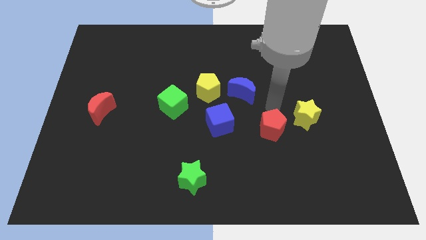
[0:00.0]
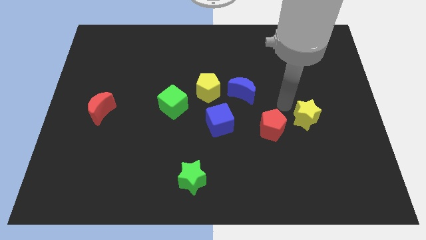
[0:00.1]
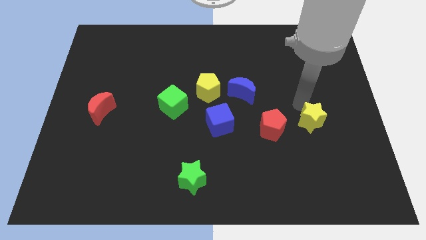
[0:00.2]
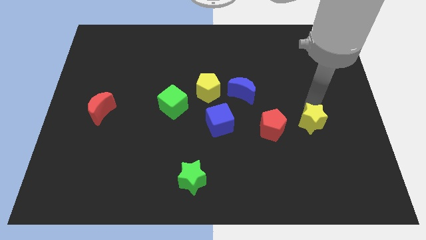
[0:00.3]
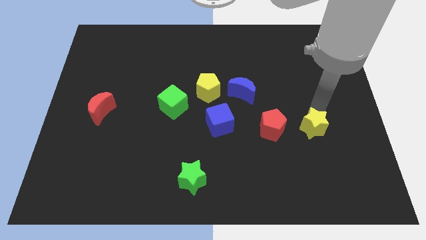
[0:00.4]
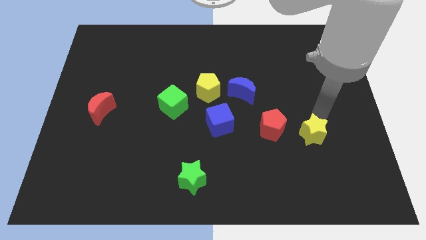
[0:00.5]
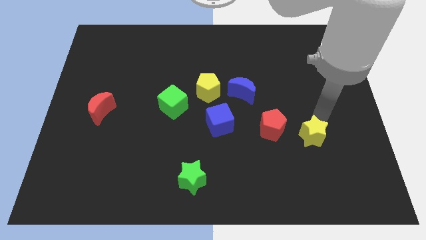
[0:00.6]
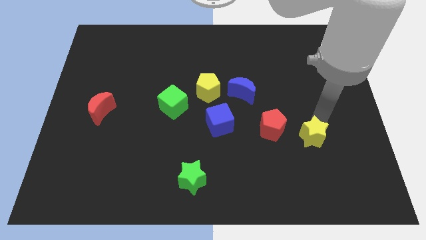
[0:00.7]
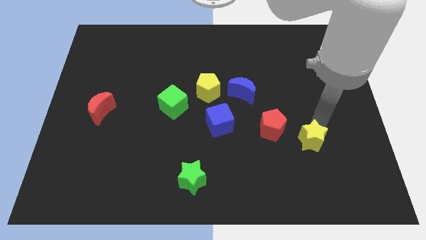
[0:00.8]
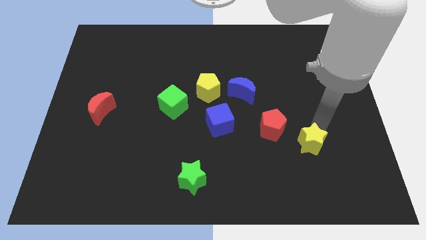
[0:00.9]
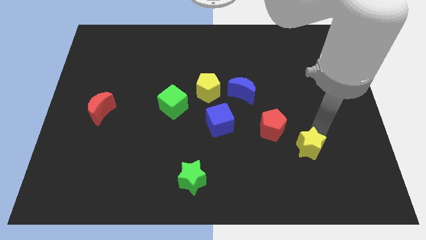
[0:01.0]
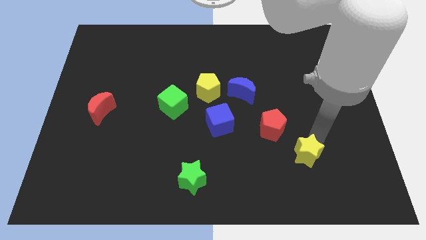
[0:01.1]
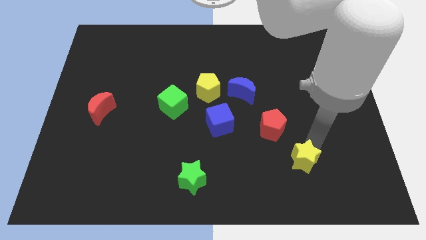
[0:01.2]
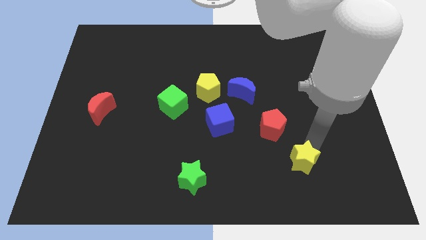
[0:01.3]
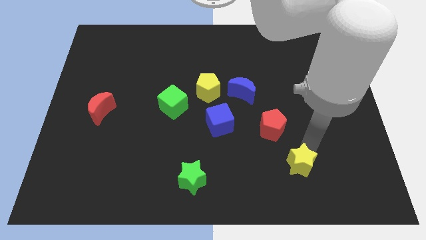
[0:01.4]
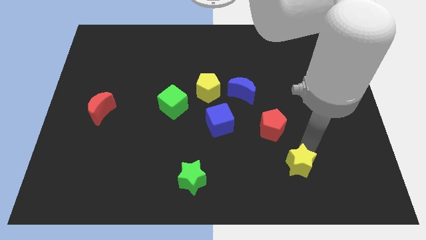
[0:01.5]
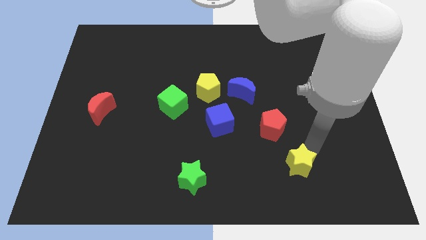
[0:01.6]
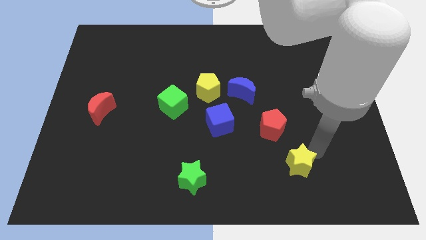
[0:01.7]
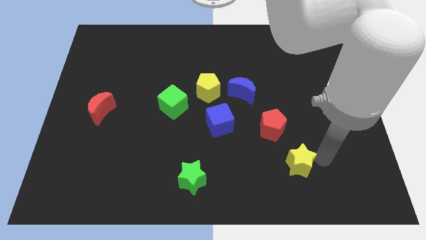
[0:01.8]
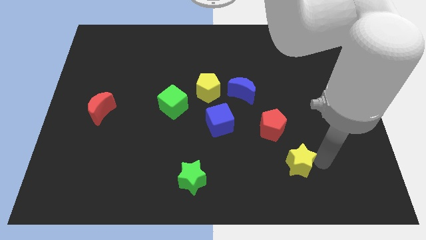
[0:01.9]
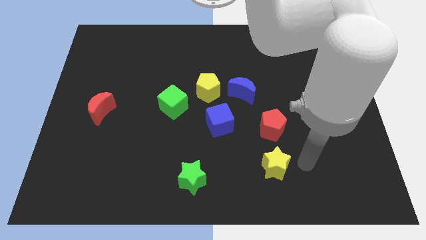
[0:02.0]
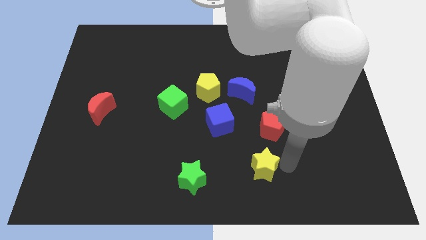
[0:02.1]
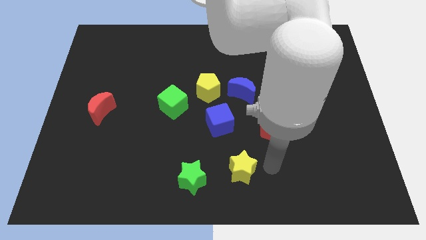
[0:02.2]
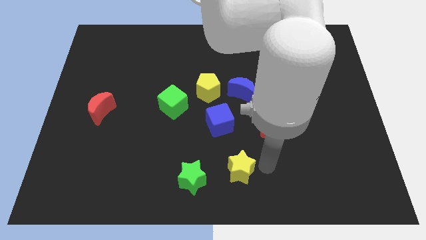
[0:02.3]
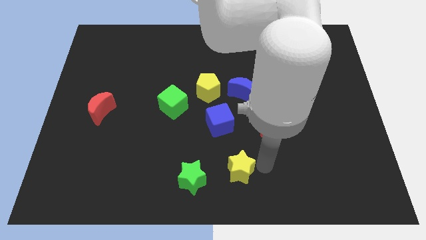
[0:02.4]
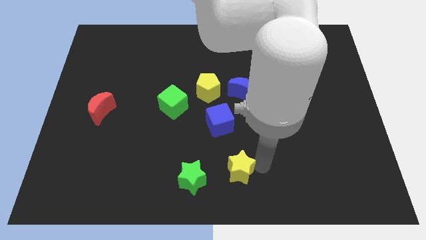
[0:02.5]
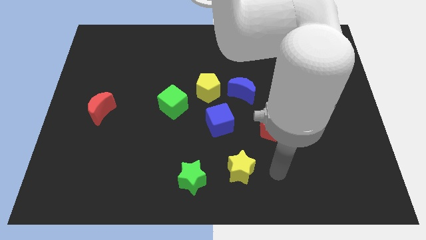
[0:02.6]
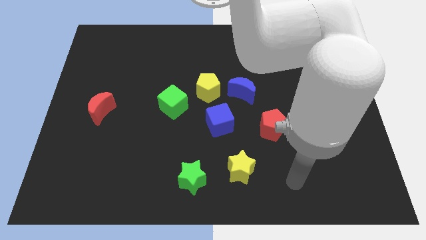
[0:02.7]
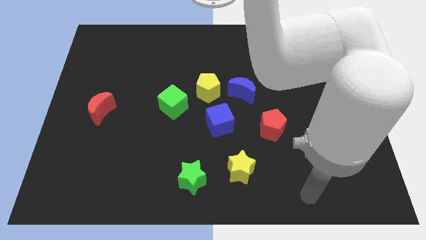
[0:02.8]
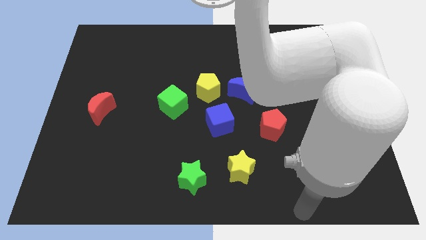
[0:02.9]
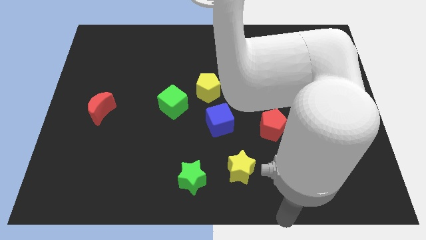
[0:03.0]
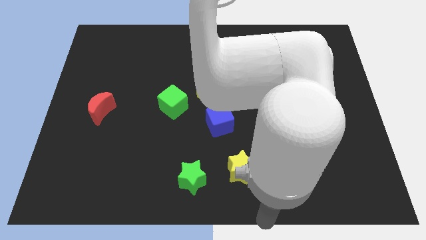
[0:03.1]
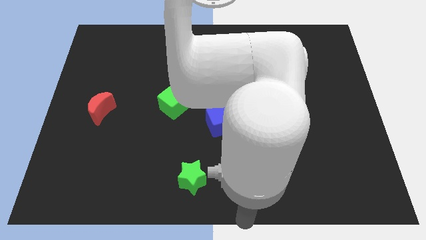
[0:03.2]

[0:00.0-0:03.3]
push the yellow star to the right of the green star

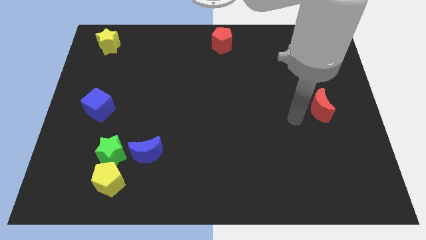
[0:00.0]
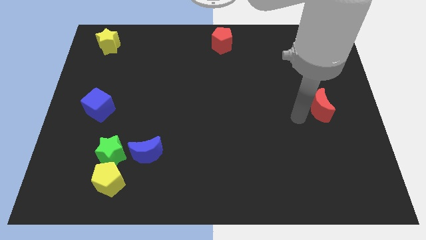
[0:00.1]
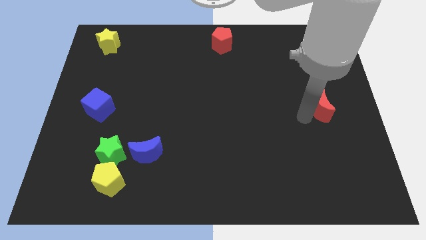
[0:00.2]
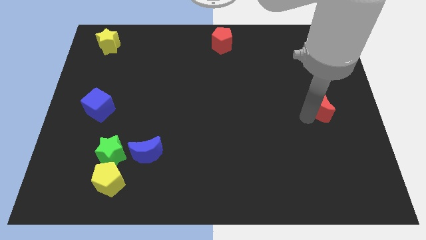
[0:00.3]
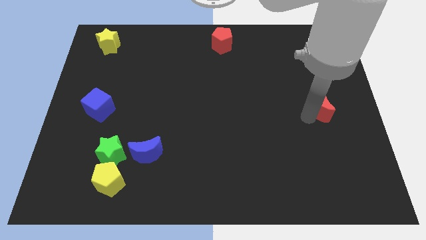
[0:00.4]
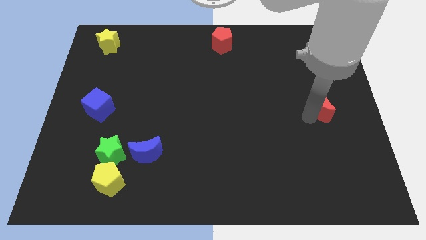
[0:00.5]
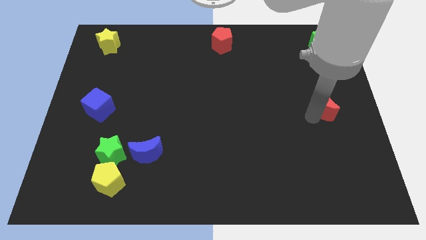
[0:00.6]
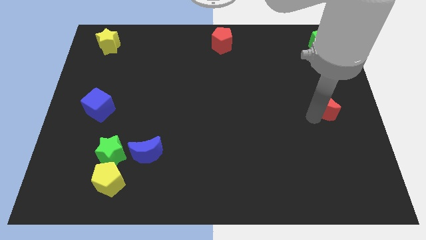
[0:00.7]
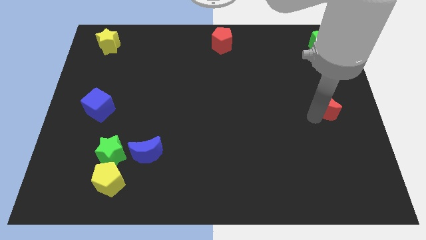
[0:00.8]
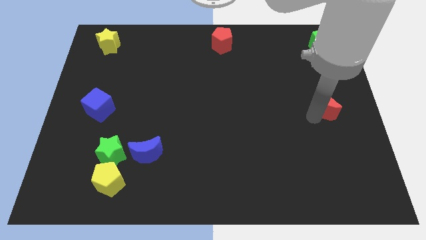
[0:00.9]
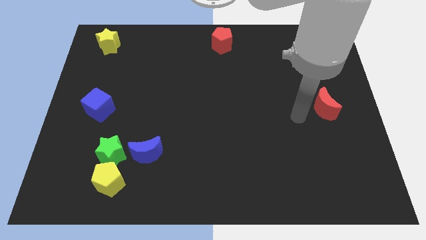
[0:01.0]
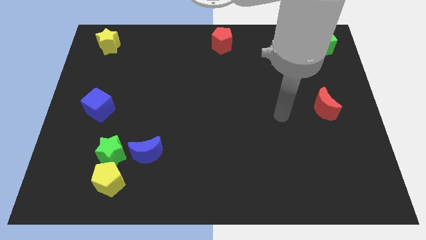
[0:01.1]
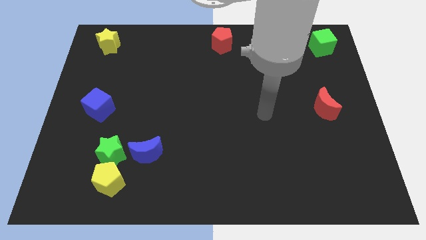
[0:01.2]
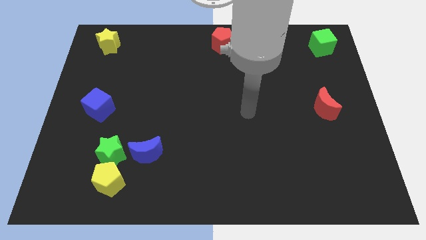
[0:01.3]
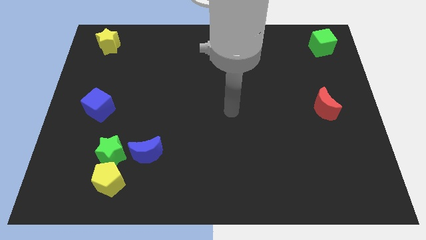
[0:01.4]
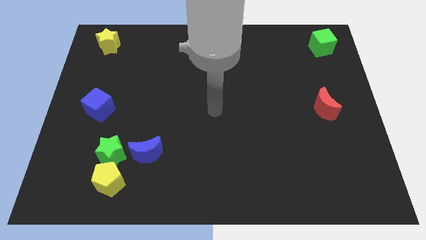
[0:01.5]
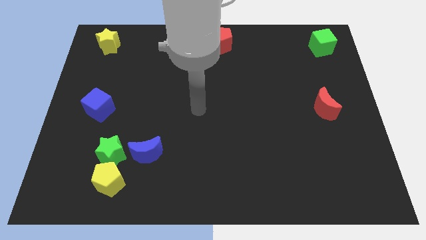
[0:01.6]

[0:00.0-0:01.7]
slightly move the red crescent towards the right center of the board

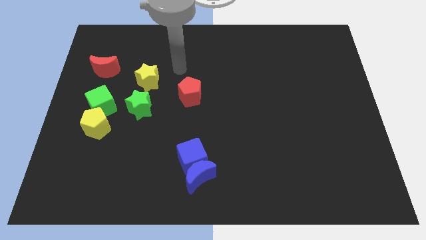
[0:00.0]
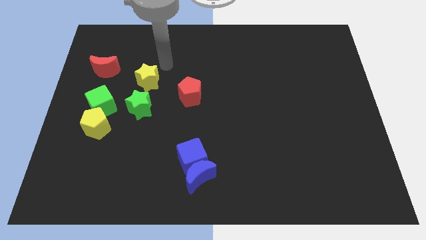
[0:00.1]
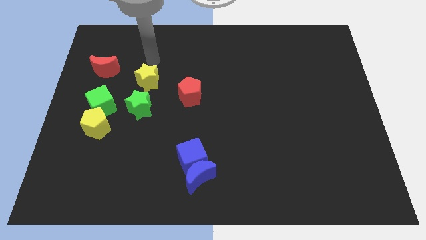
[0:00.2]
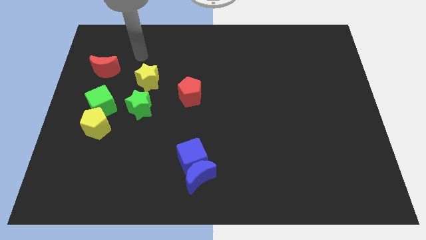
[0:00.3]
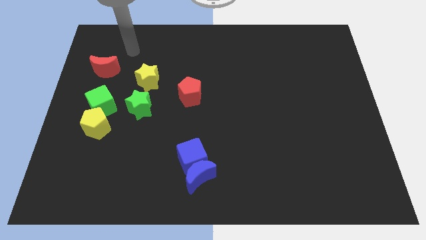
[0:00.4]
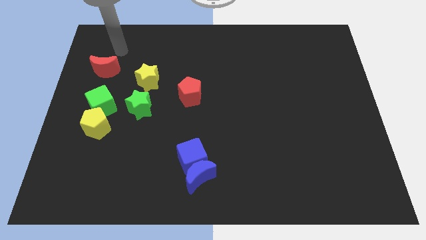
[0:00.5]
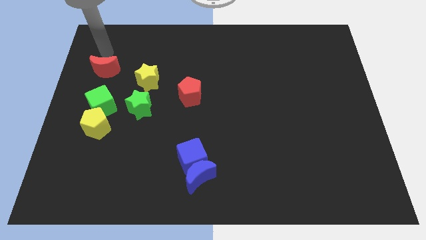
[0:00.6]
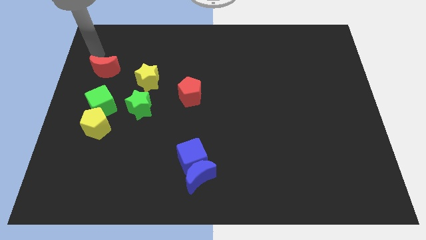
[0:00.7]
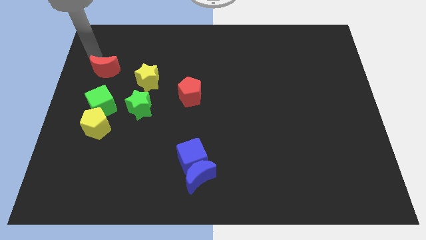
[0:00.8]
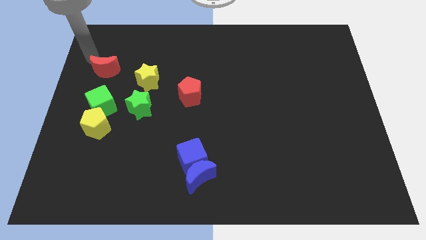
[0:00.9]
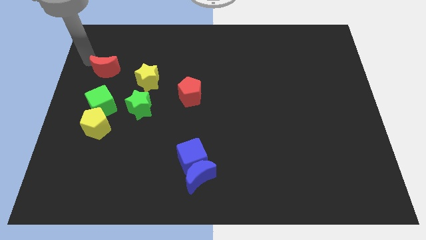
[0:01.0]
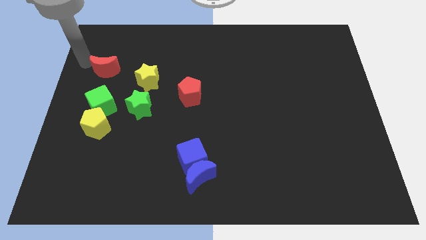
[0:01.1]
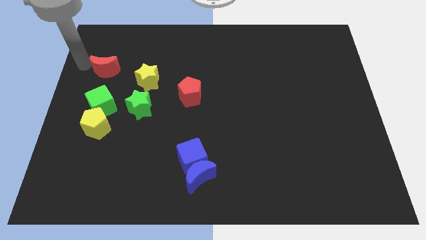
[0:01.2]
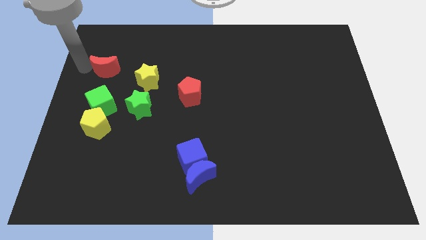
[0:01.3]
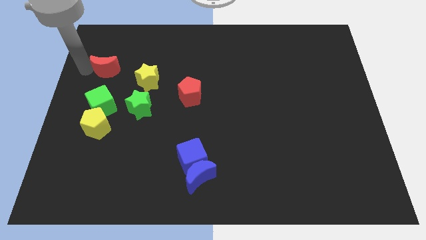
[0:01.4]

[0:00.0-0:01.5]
move your arm to the left of the red crescent

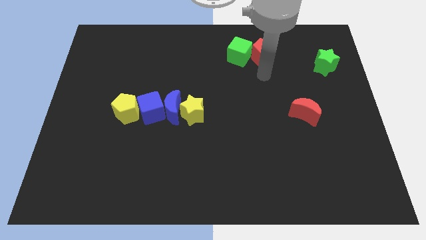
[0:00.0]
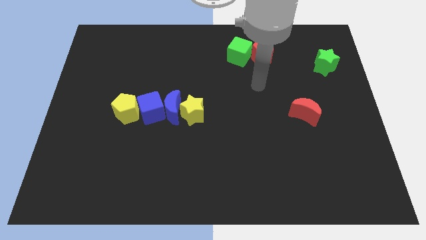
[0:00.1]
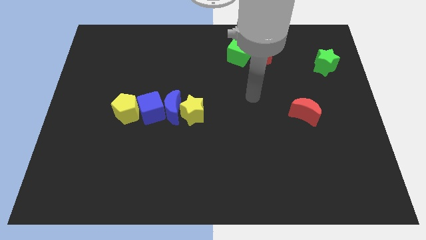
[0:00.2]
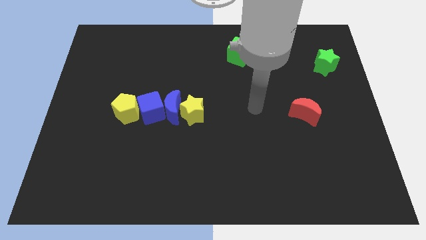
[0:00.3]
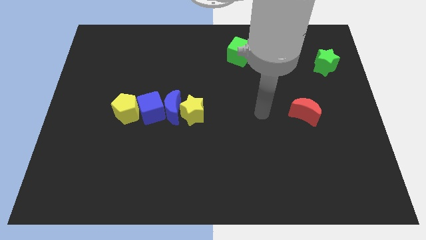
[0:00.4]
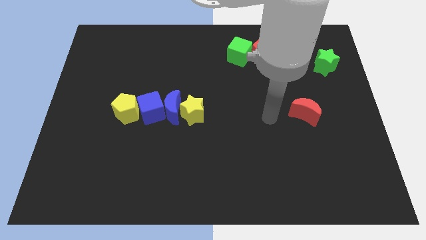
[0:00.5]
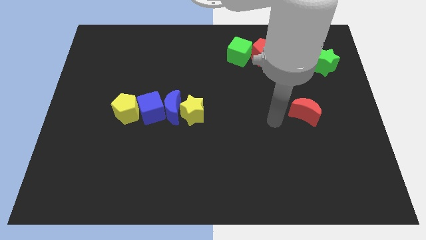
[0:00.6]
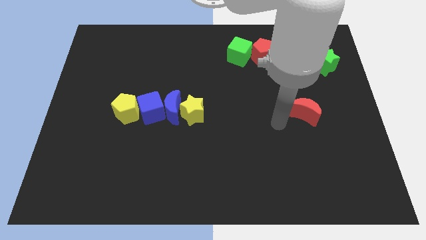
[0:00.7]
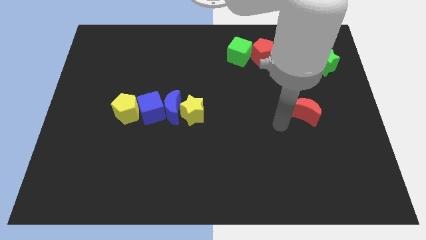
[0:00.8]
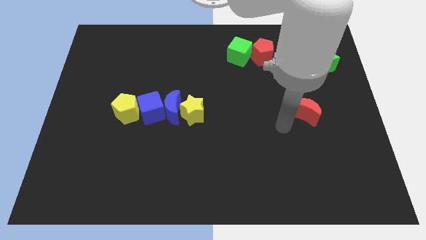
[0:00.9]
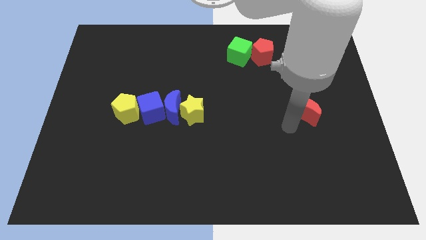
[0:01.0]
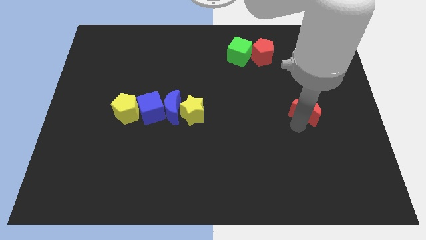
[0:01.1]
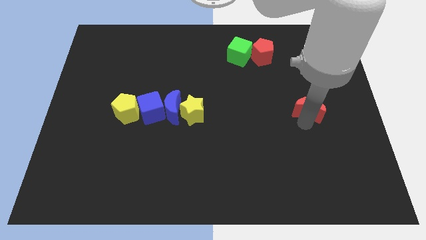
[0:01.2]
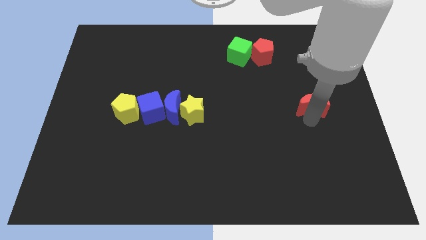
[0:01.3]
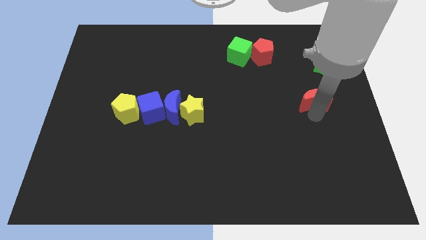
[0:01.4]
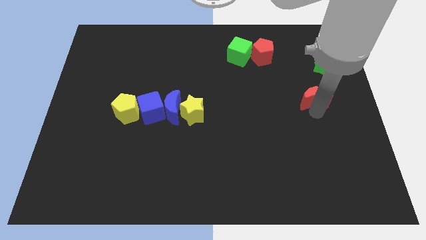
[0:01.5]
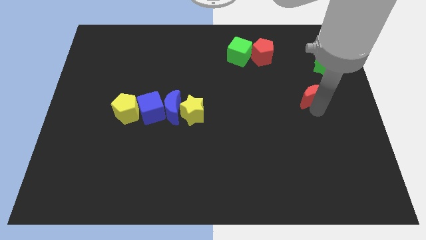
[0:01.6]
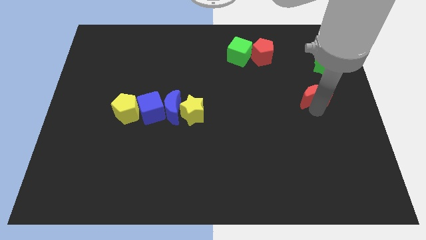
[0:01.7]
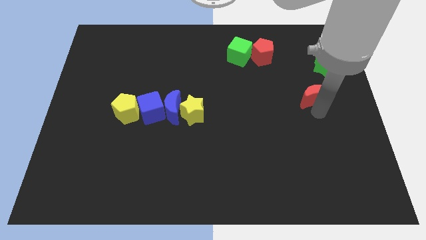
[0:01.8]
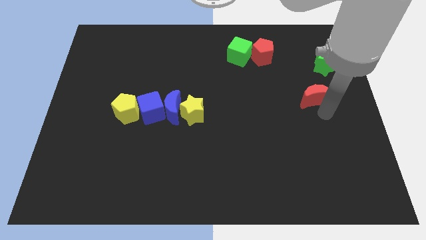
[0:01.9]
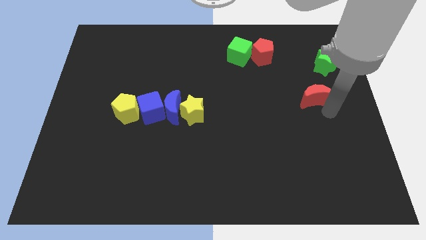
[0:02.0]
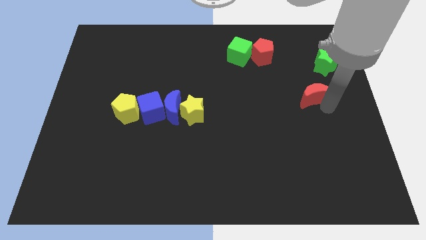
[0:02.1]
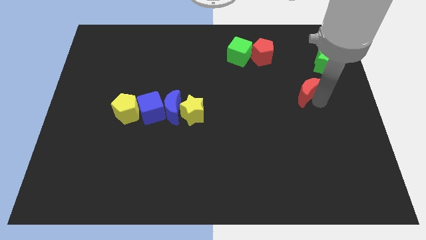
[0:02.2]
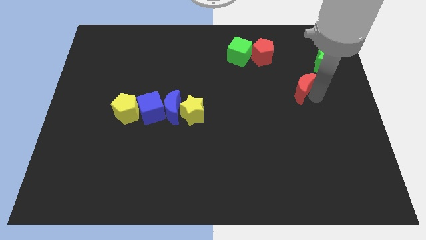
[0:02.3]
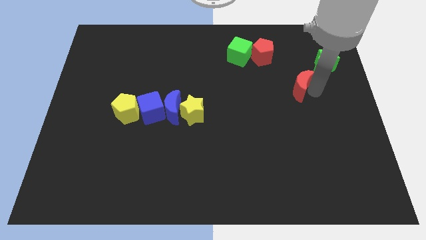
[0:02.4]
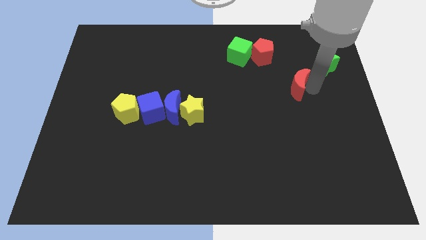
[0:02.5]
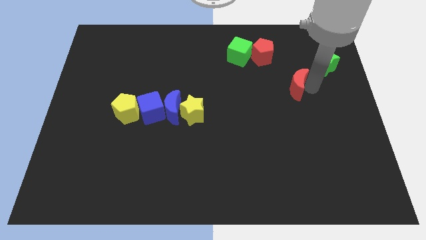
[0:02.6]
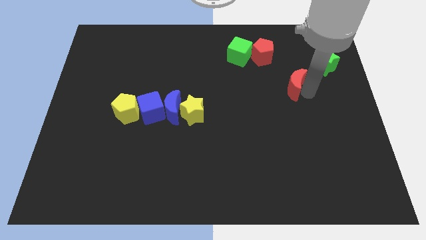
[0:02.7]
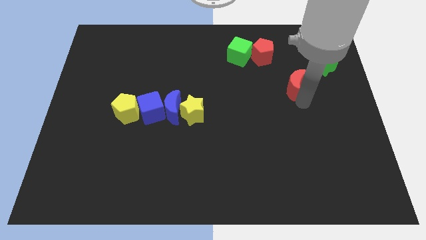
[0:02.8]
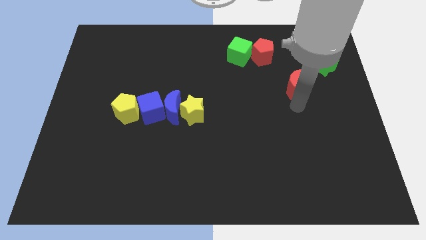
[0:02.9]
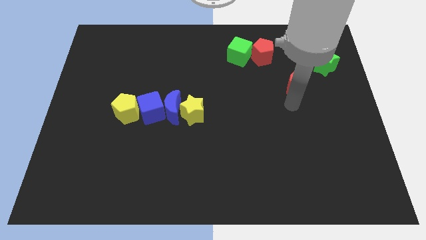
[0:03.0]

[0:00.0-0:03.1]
push the red crescent towards the red pentagon
